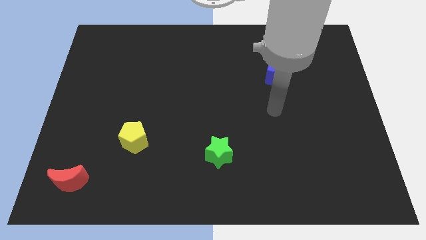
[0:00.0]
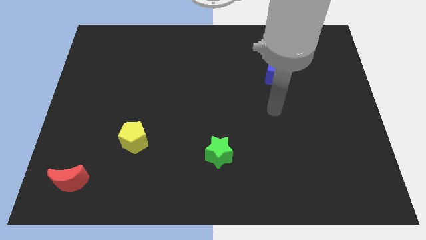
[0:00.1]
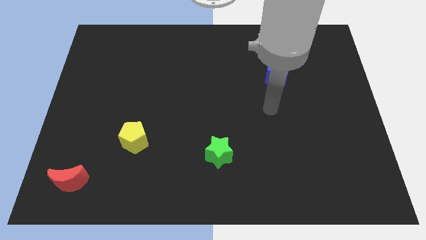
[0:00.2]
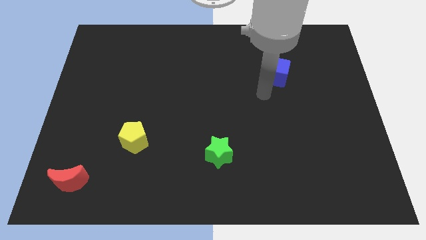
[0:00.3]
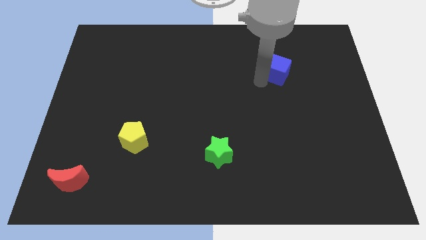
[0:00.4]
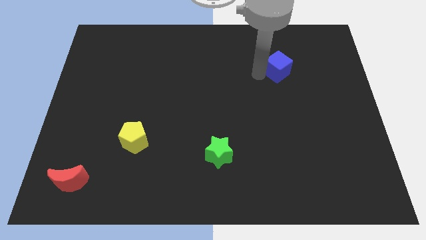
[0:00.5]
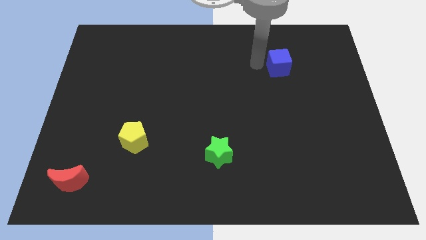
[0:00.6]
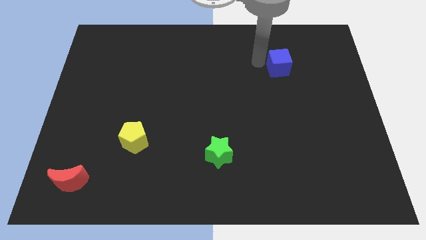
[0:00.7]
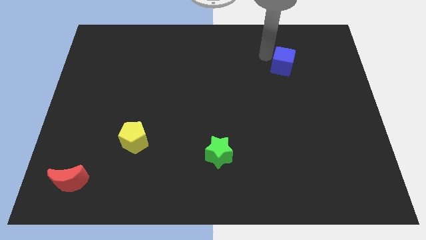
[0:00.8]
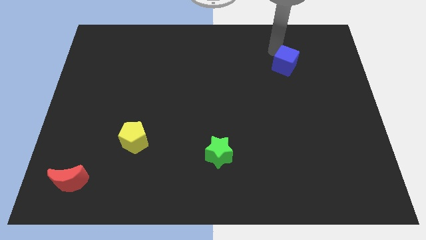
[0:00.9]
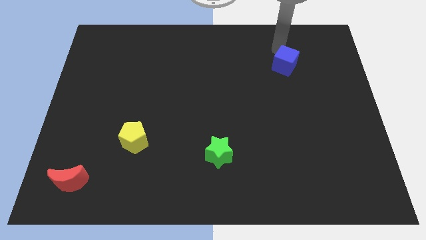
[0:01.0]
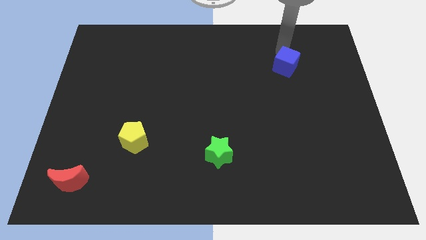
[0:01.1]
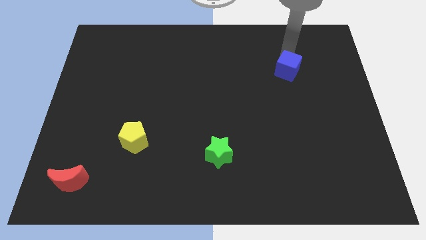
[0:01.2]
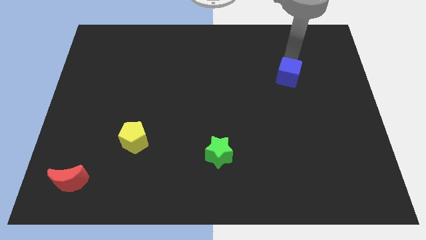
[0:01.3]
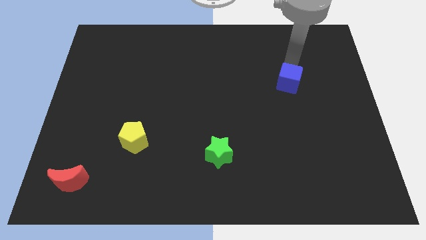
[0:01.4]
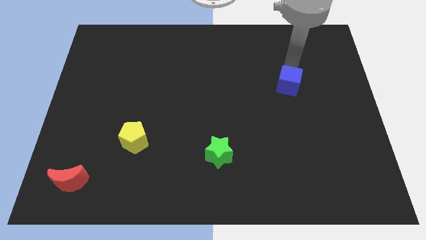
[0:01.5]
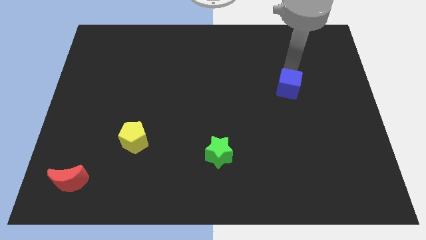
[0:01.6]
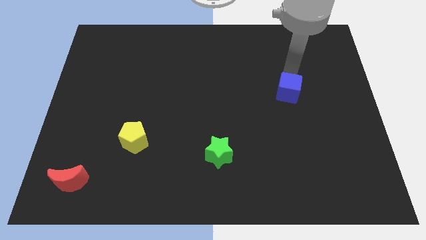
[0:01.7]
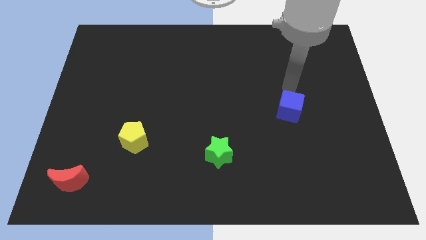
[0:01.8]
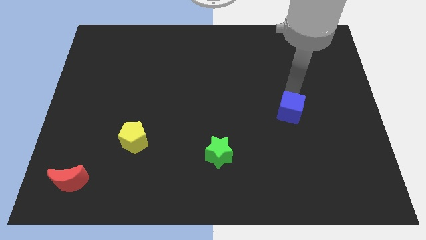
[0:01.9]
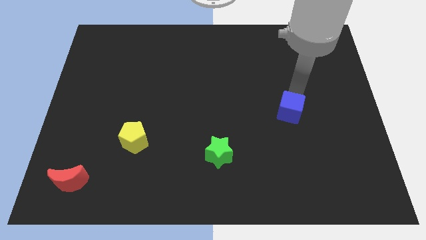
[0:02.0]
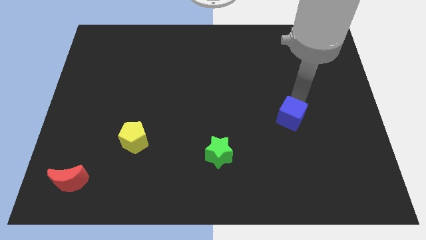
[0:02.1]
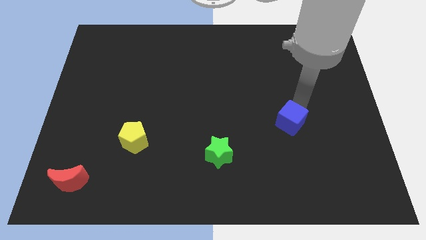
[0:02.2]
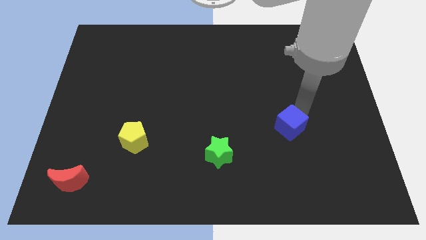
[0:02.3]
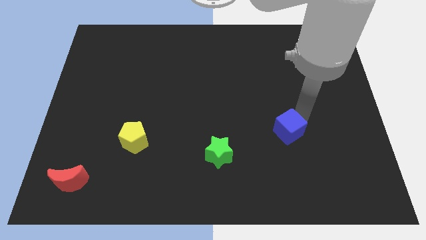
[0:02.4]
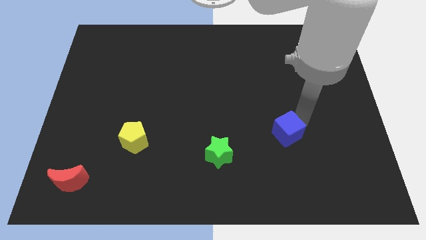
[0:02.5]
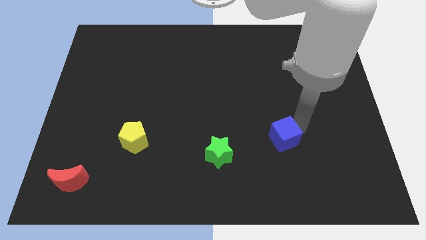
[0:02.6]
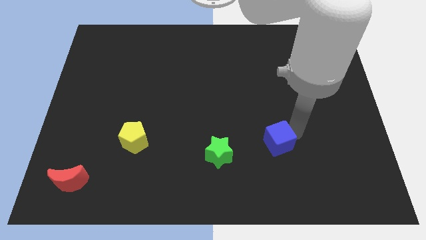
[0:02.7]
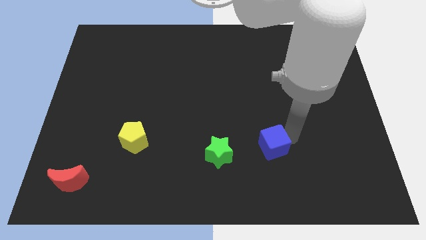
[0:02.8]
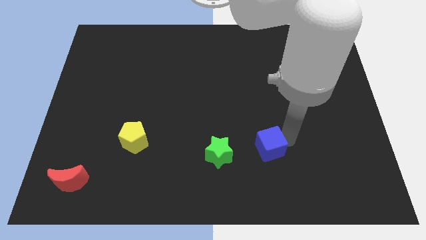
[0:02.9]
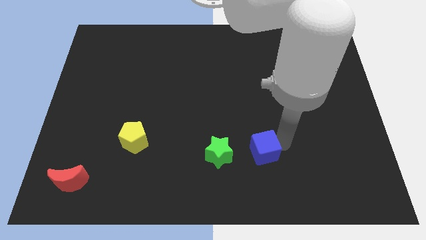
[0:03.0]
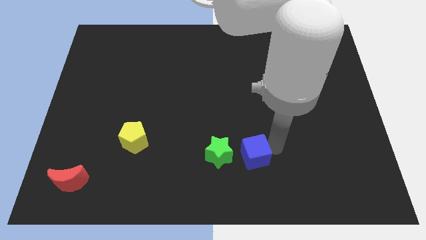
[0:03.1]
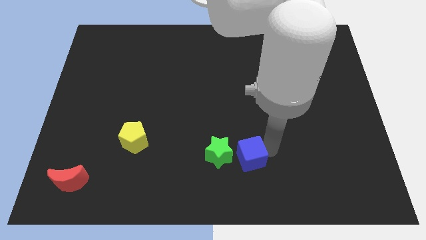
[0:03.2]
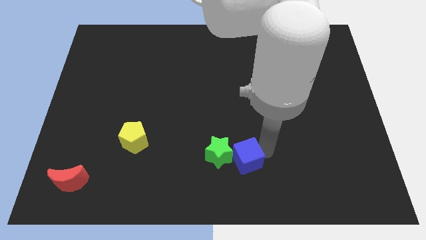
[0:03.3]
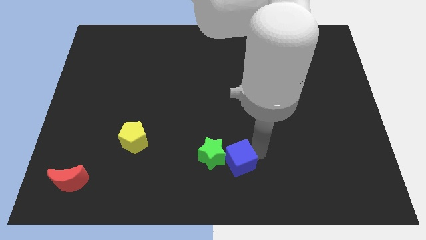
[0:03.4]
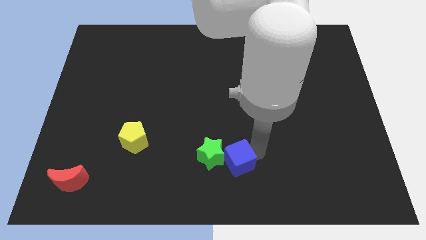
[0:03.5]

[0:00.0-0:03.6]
push the blue block close to the green block

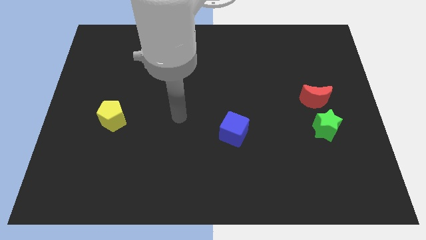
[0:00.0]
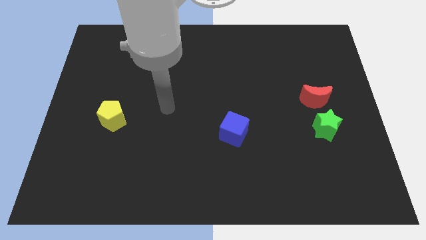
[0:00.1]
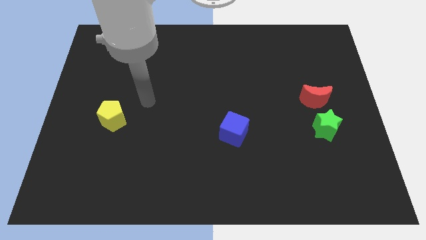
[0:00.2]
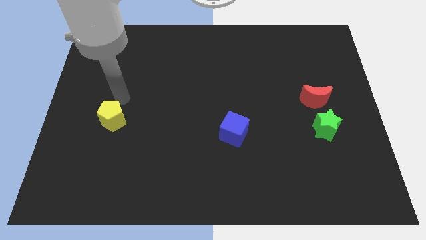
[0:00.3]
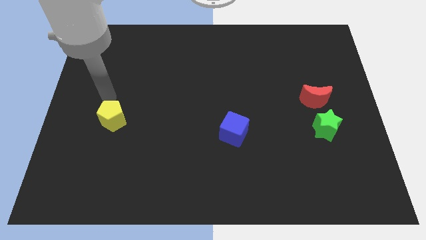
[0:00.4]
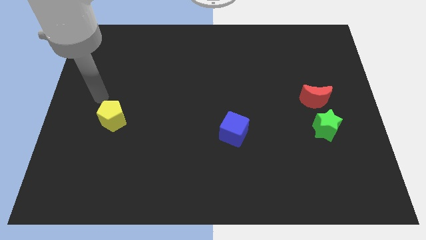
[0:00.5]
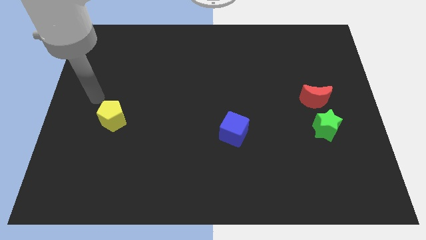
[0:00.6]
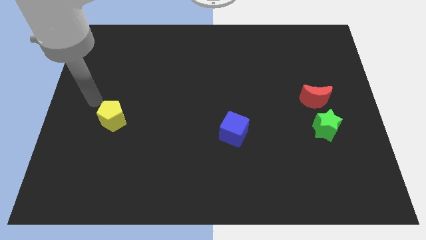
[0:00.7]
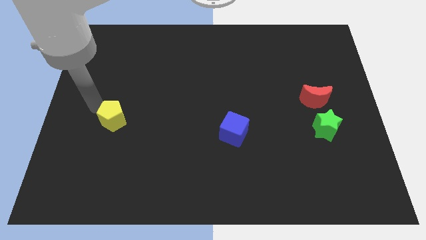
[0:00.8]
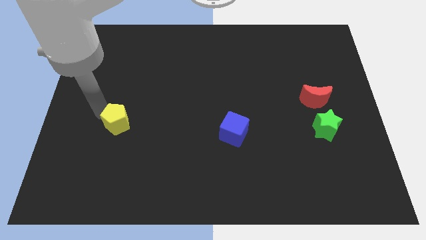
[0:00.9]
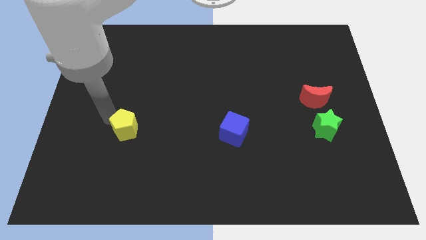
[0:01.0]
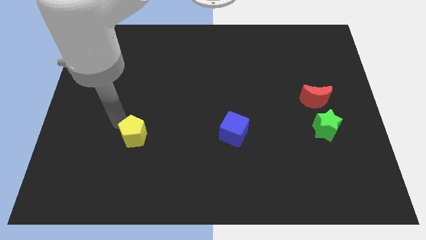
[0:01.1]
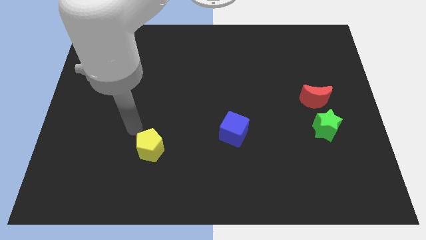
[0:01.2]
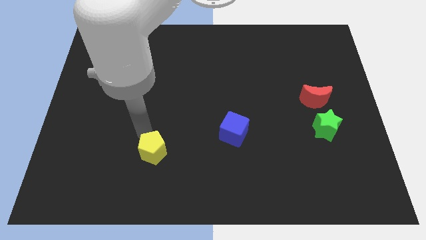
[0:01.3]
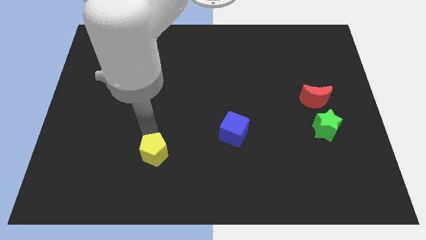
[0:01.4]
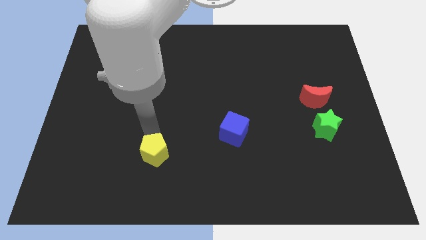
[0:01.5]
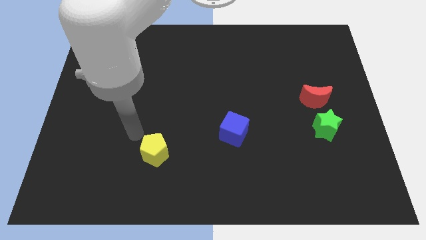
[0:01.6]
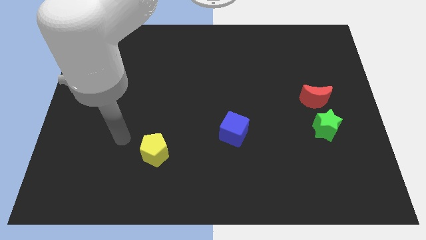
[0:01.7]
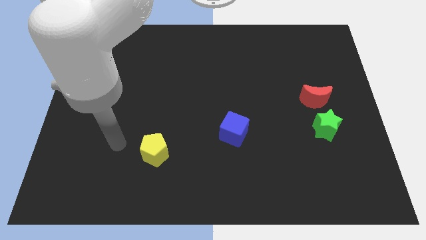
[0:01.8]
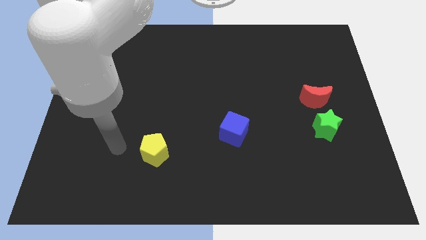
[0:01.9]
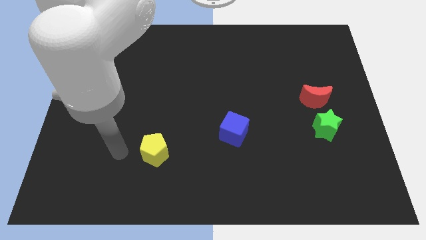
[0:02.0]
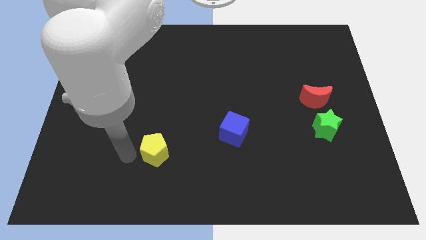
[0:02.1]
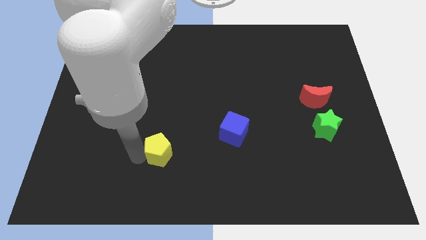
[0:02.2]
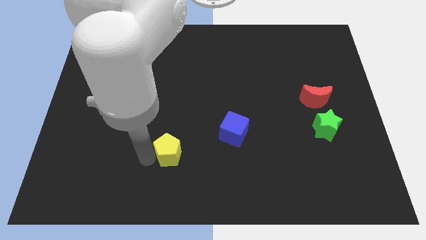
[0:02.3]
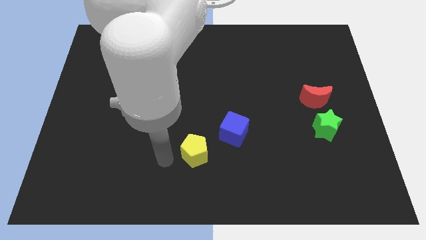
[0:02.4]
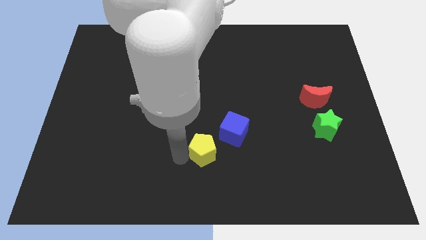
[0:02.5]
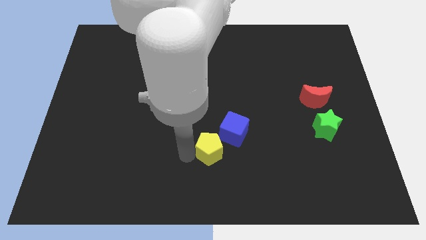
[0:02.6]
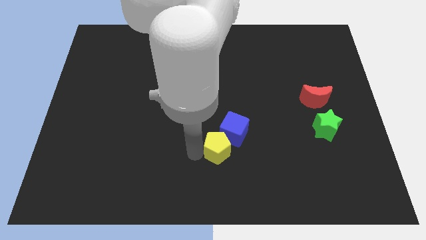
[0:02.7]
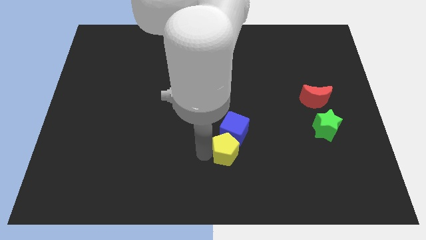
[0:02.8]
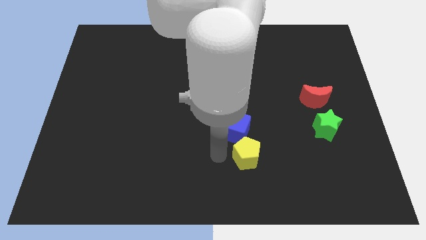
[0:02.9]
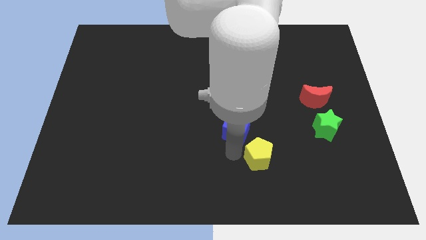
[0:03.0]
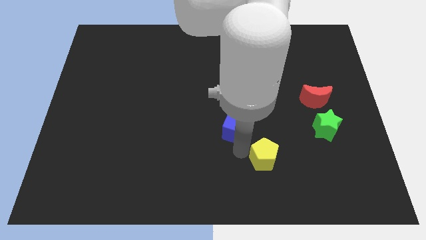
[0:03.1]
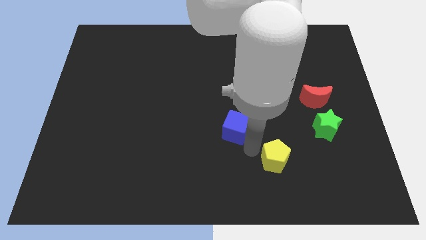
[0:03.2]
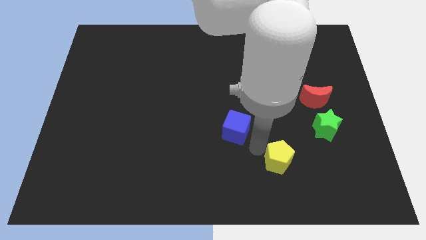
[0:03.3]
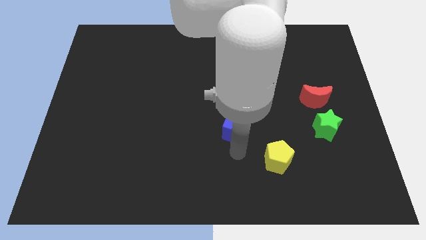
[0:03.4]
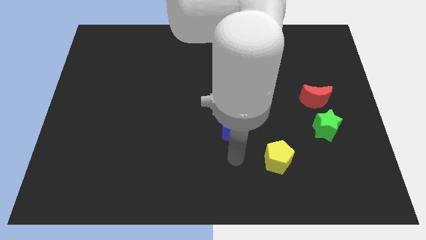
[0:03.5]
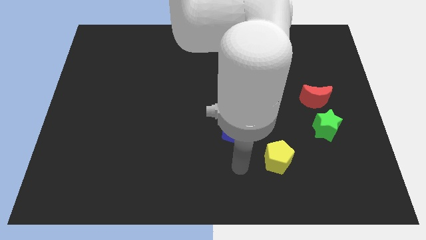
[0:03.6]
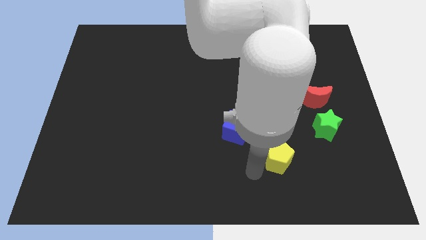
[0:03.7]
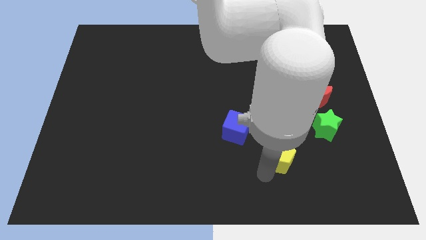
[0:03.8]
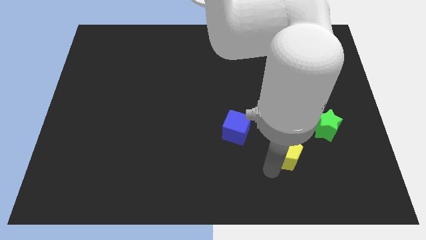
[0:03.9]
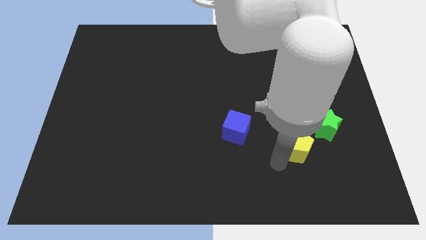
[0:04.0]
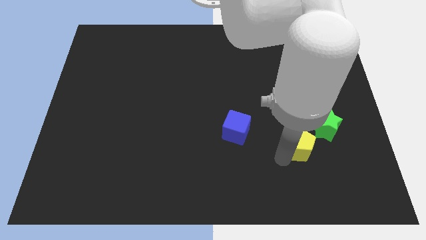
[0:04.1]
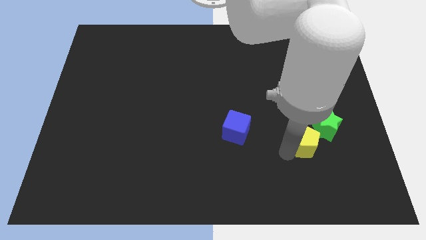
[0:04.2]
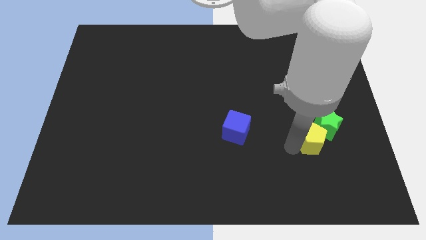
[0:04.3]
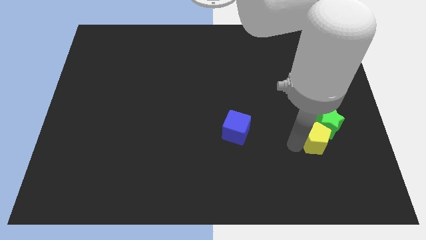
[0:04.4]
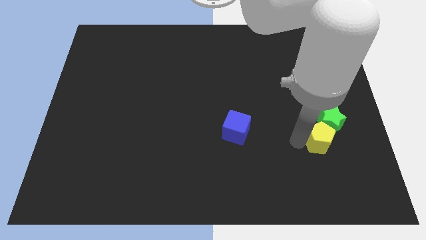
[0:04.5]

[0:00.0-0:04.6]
slide the yellow block next to the green star

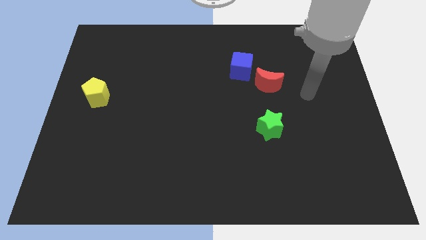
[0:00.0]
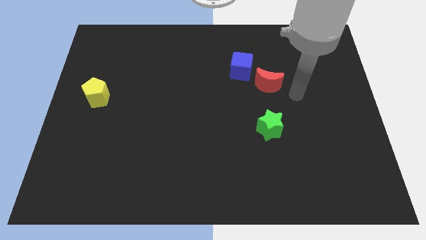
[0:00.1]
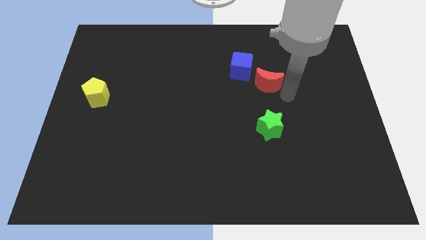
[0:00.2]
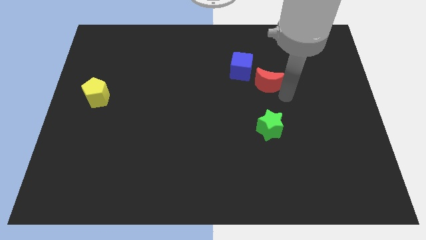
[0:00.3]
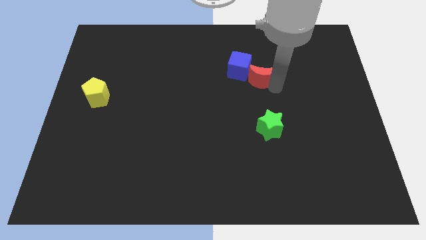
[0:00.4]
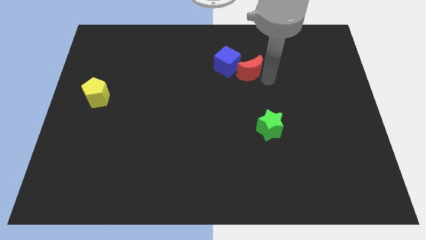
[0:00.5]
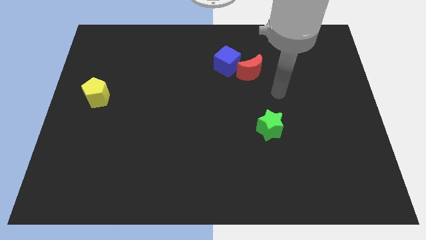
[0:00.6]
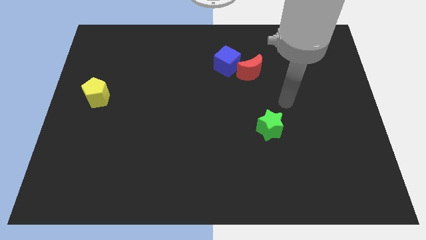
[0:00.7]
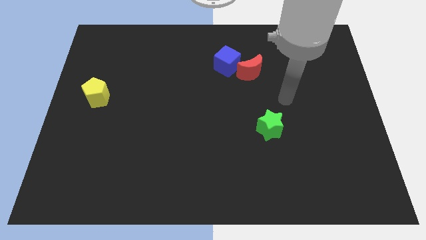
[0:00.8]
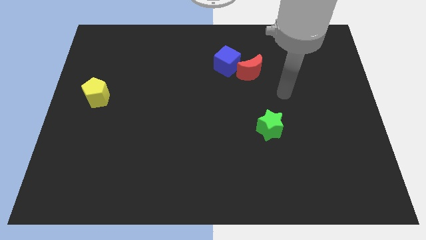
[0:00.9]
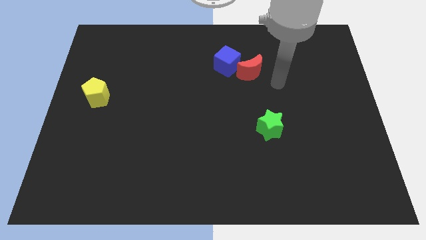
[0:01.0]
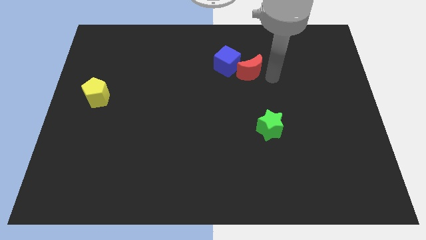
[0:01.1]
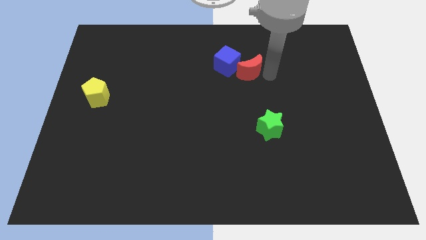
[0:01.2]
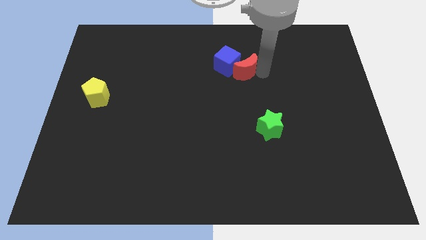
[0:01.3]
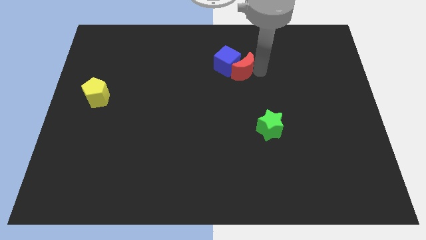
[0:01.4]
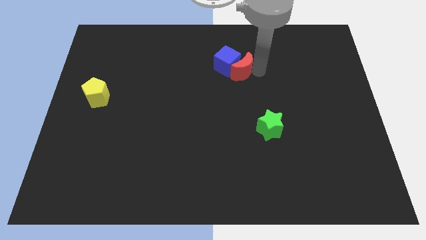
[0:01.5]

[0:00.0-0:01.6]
slide the moon next to the cube
